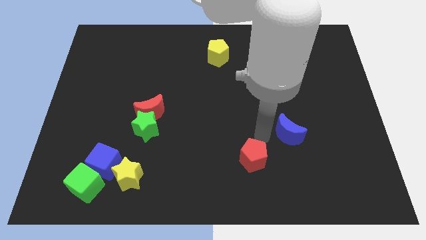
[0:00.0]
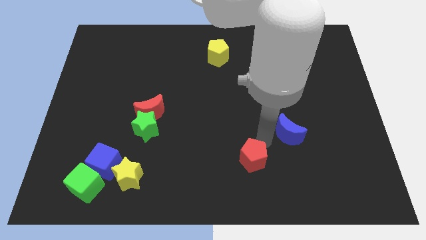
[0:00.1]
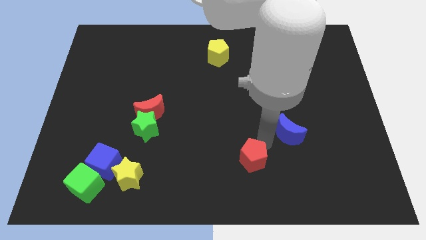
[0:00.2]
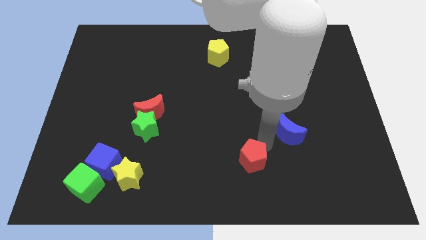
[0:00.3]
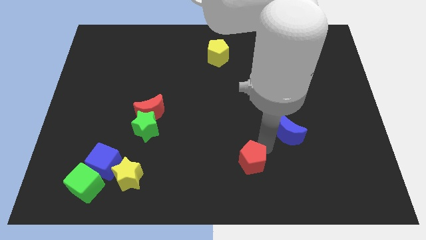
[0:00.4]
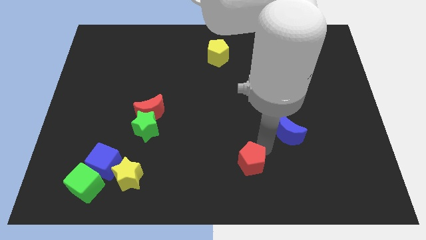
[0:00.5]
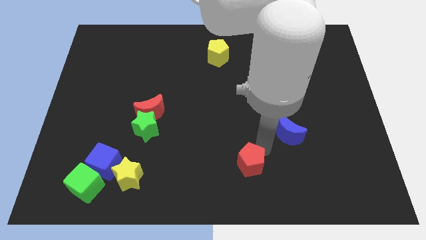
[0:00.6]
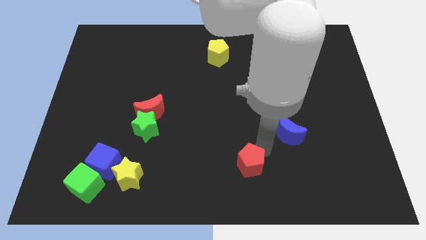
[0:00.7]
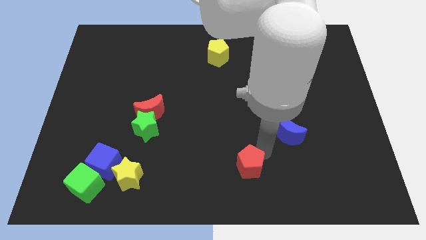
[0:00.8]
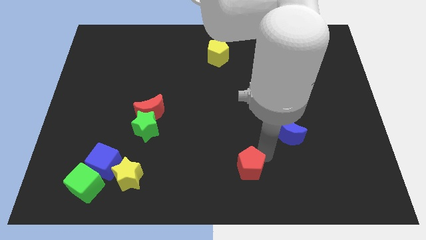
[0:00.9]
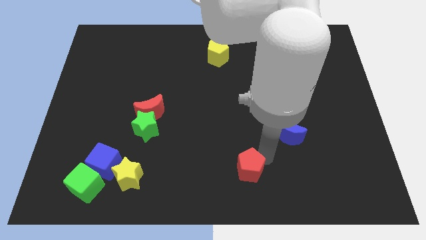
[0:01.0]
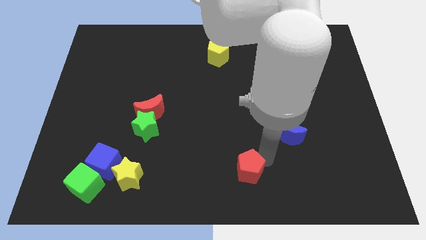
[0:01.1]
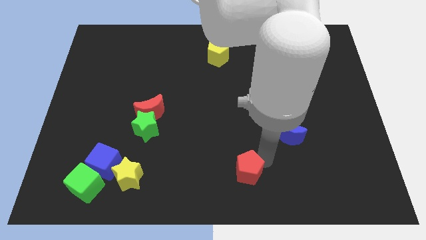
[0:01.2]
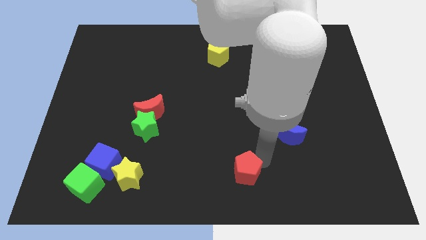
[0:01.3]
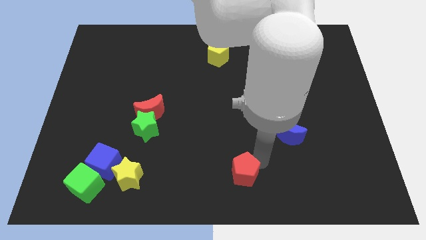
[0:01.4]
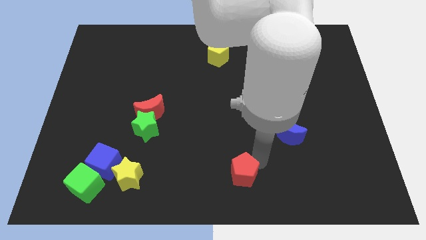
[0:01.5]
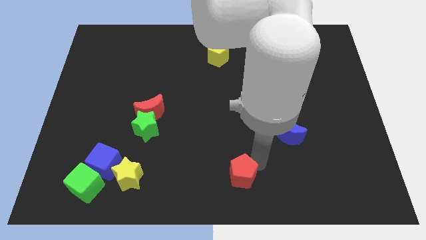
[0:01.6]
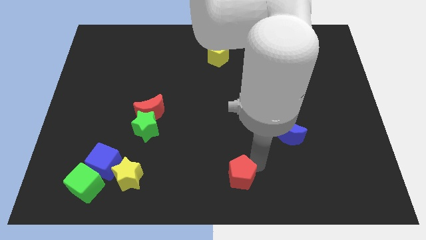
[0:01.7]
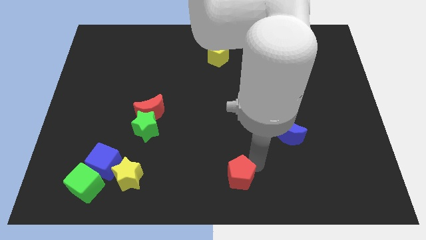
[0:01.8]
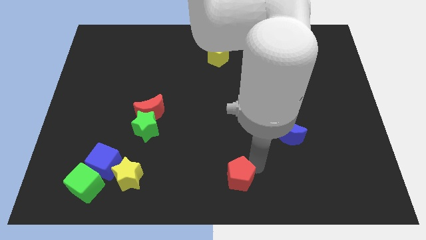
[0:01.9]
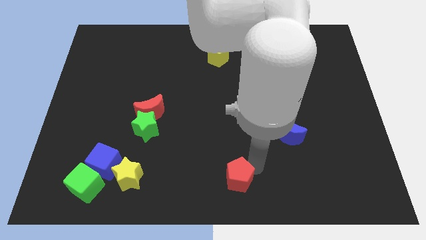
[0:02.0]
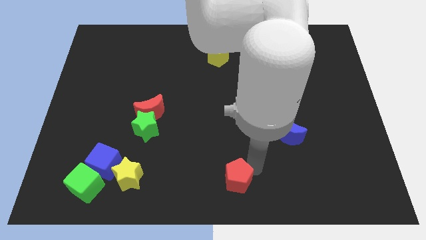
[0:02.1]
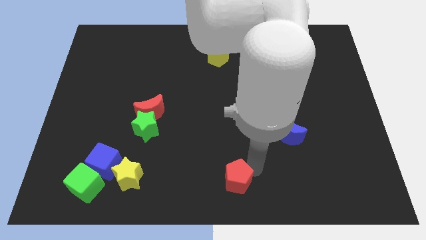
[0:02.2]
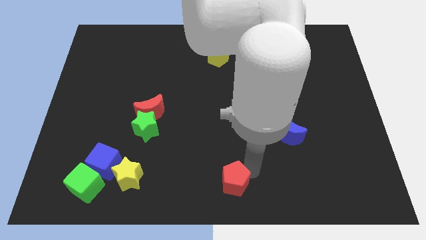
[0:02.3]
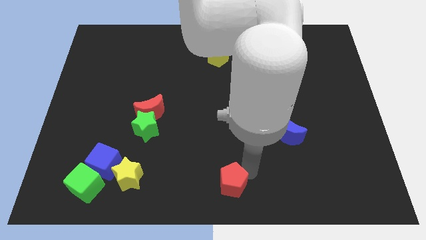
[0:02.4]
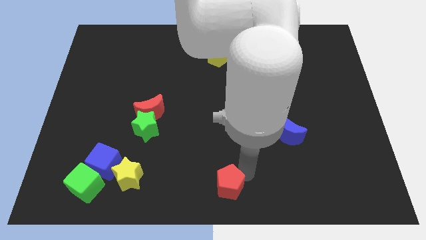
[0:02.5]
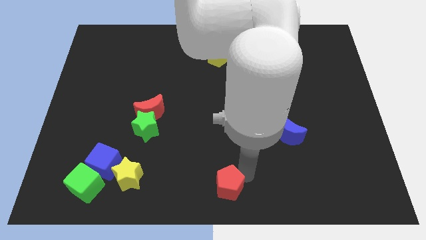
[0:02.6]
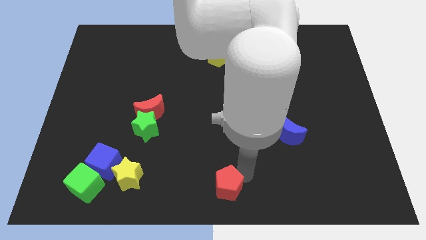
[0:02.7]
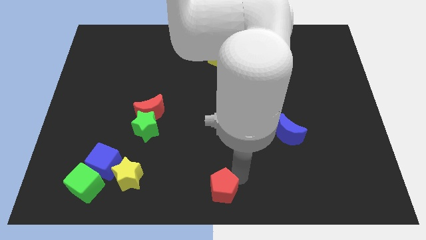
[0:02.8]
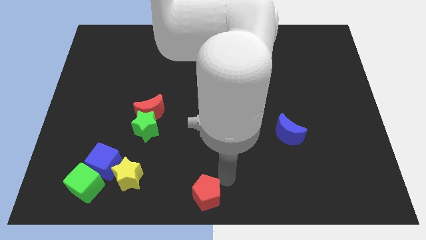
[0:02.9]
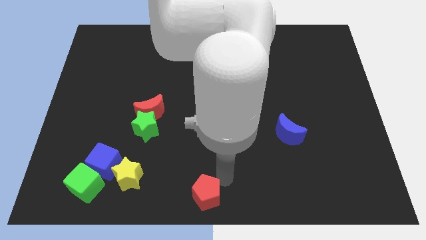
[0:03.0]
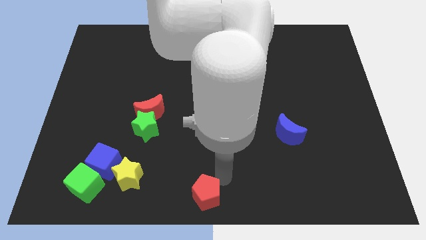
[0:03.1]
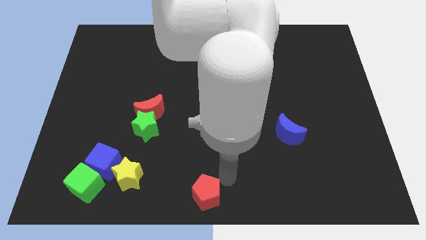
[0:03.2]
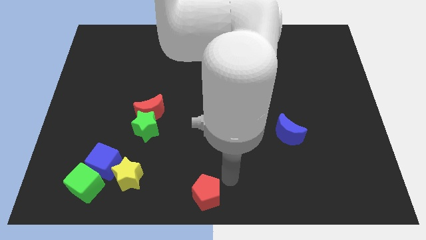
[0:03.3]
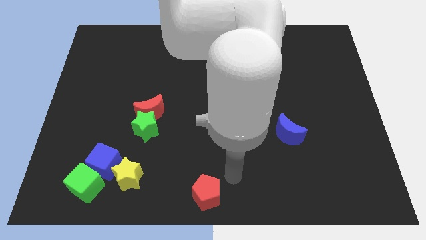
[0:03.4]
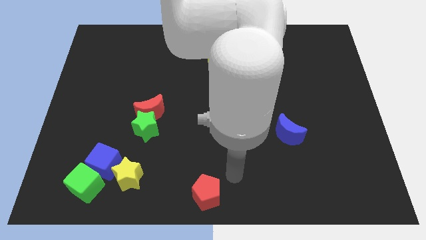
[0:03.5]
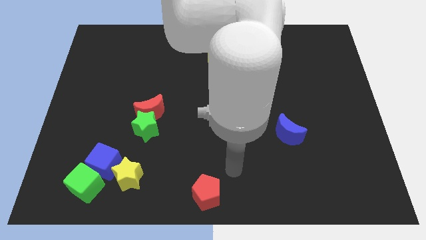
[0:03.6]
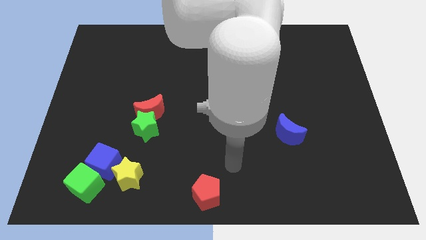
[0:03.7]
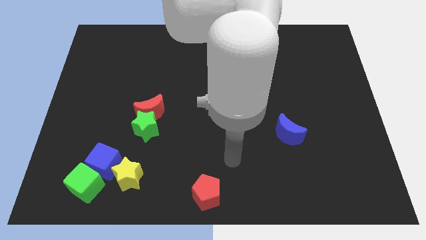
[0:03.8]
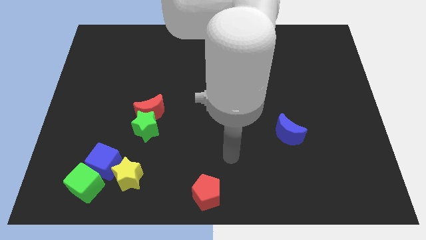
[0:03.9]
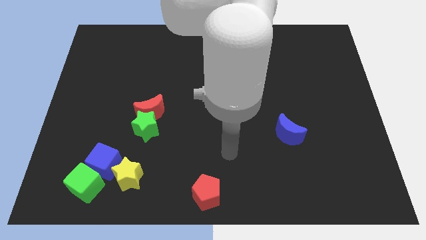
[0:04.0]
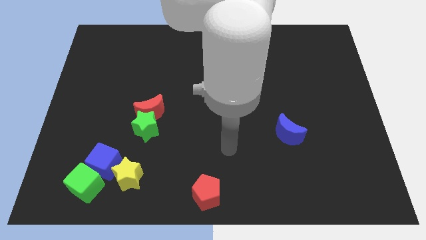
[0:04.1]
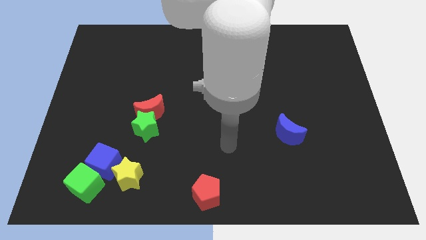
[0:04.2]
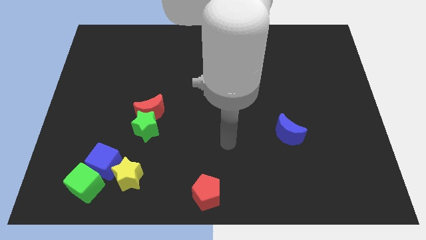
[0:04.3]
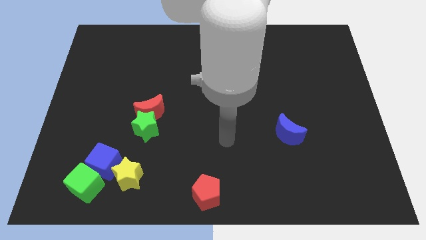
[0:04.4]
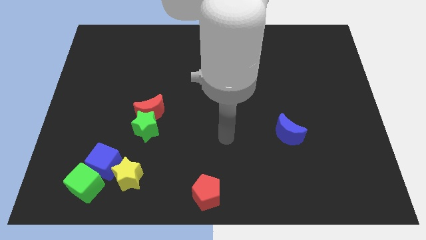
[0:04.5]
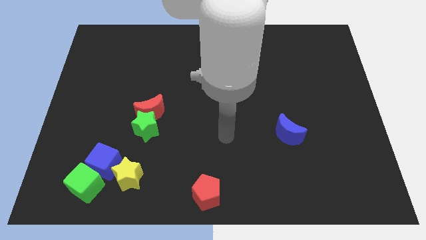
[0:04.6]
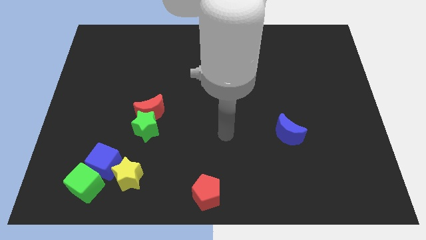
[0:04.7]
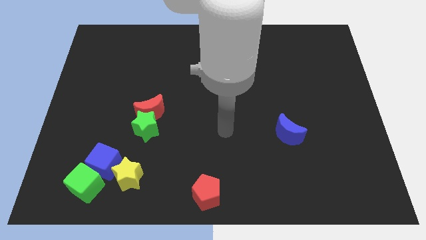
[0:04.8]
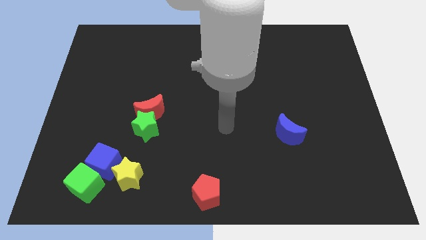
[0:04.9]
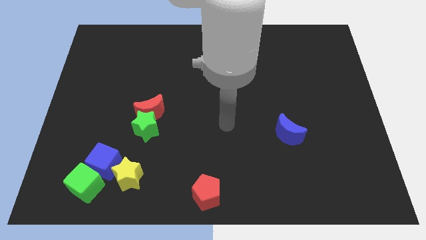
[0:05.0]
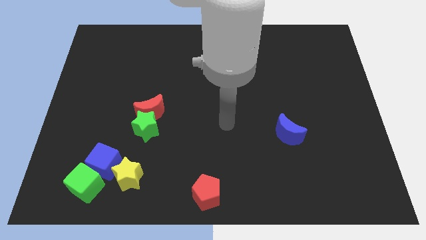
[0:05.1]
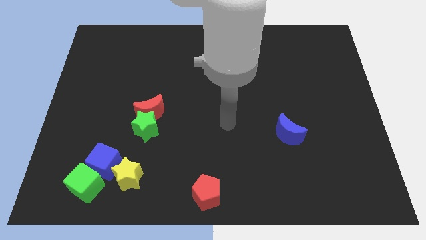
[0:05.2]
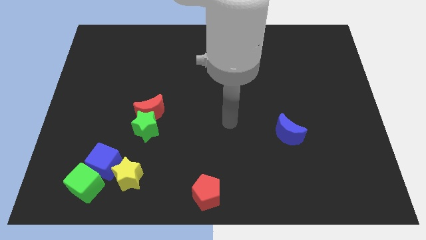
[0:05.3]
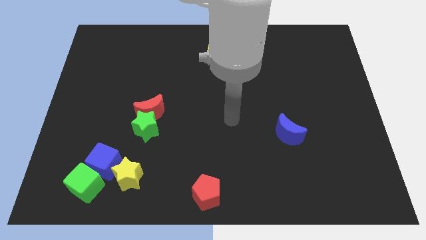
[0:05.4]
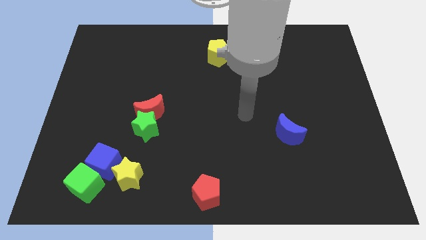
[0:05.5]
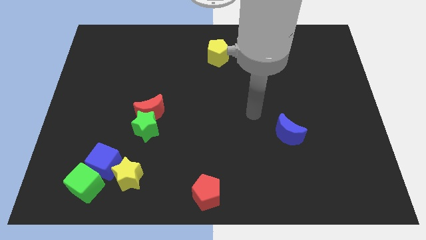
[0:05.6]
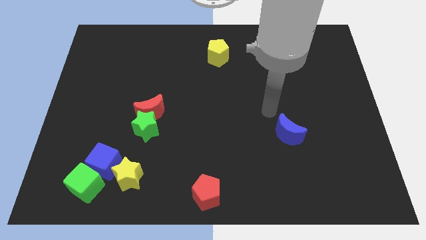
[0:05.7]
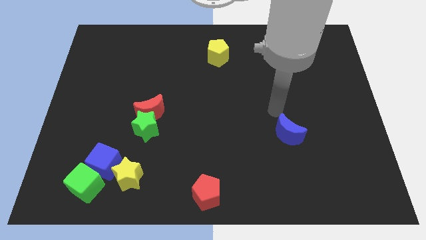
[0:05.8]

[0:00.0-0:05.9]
place the red pentagon below the yellow pentagon

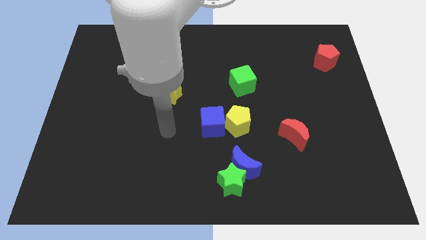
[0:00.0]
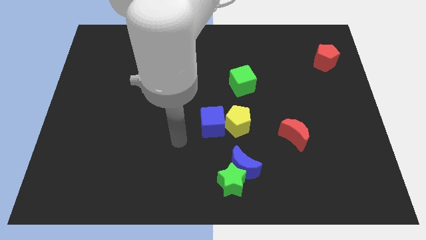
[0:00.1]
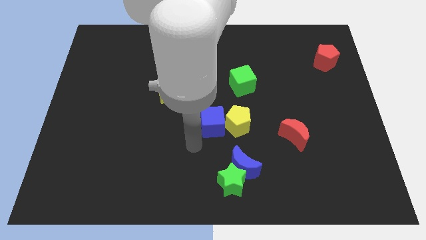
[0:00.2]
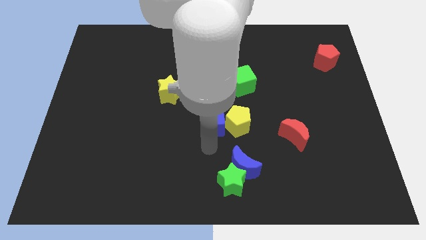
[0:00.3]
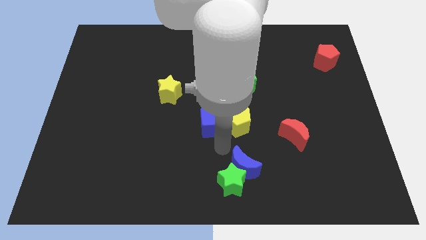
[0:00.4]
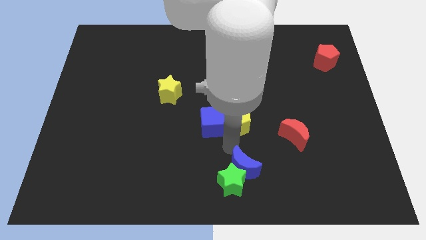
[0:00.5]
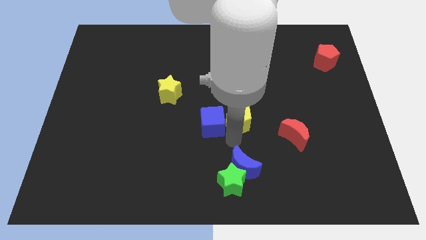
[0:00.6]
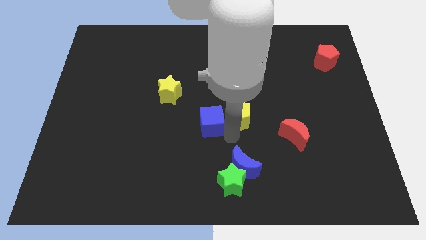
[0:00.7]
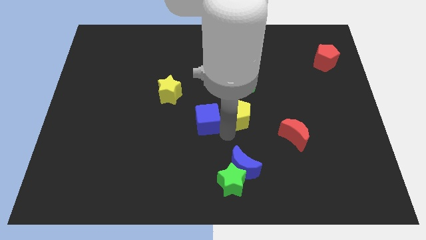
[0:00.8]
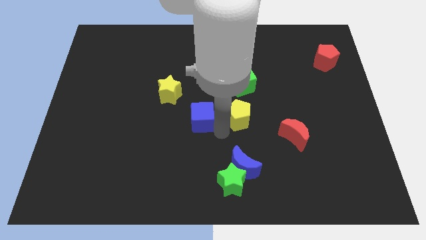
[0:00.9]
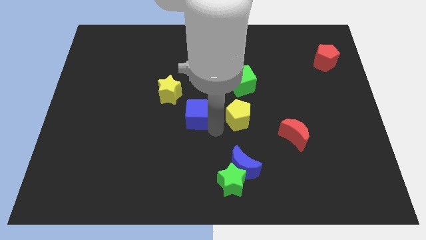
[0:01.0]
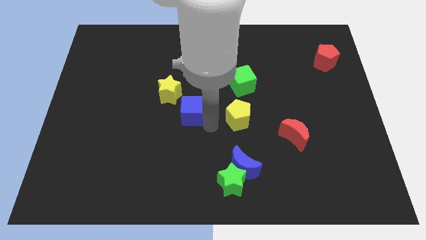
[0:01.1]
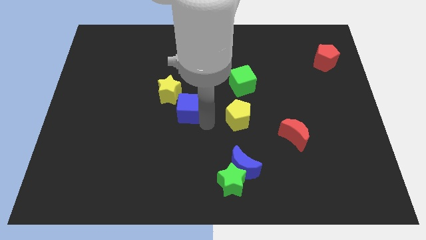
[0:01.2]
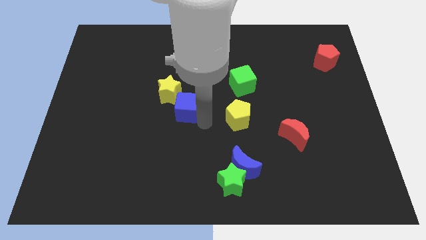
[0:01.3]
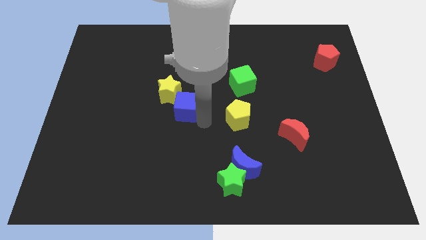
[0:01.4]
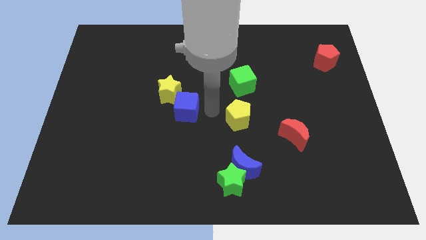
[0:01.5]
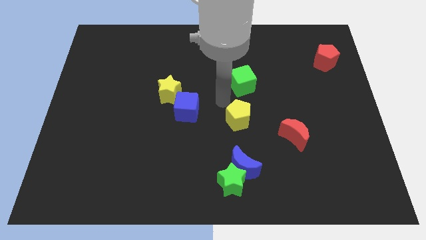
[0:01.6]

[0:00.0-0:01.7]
move the blue cube slightly to the left

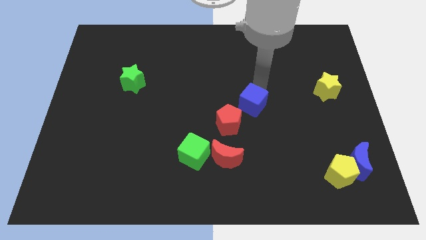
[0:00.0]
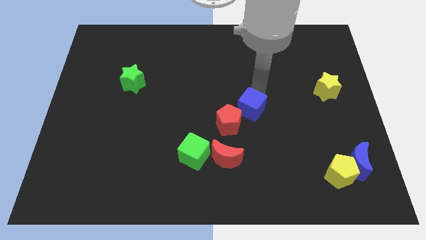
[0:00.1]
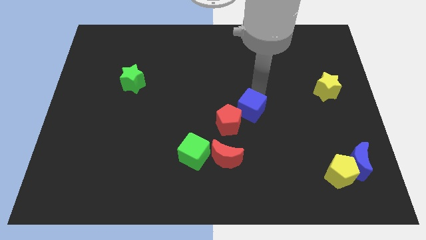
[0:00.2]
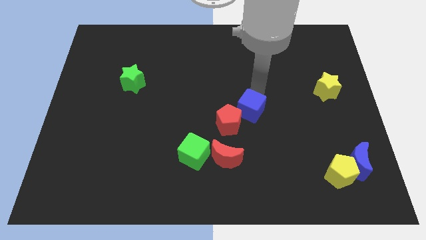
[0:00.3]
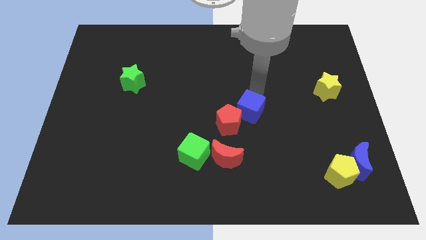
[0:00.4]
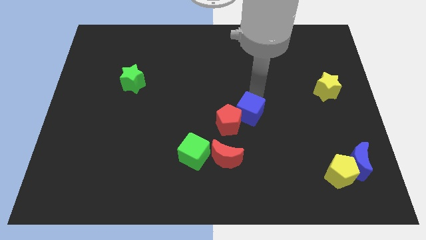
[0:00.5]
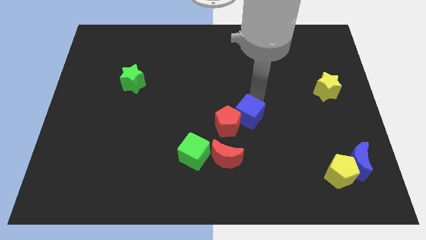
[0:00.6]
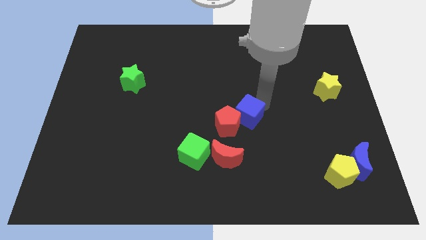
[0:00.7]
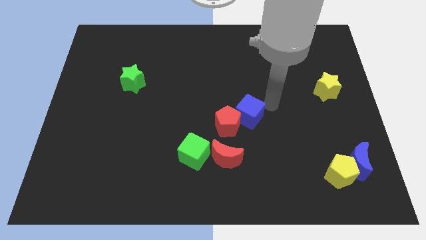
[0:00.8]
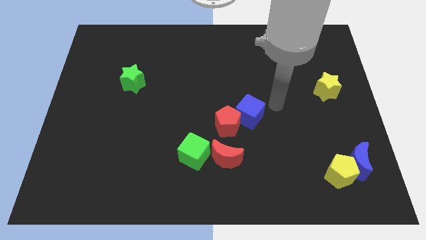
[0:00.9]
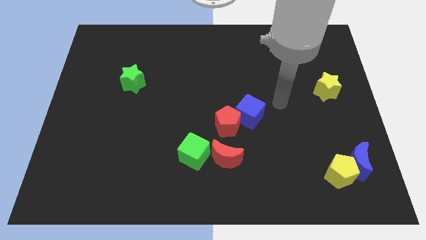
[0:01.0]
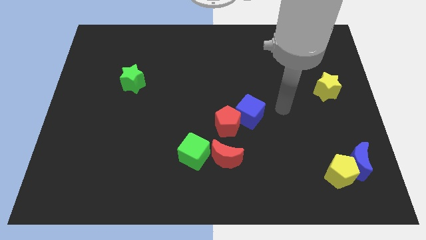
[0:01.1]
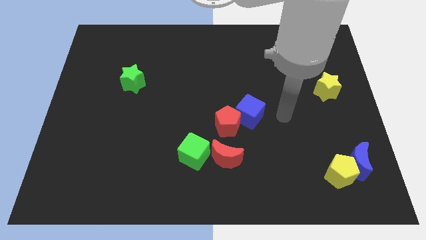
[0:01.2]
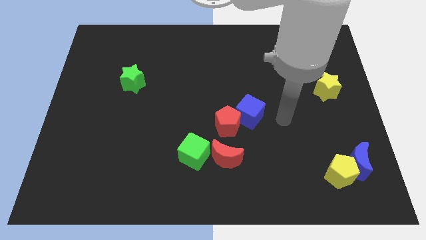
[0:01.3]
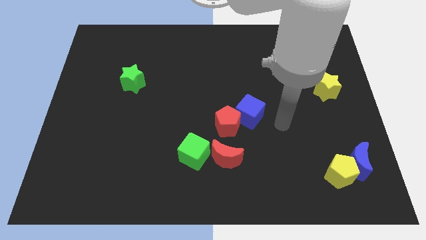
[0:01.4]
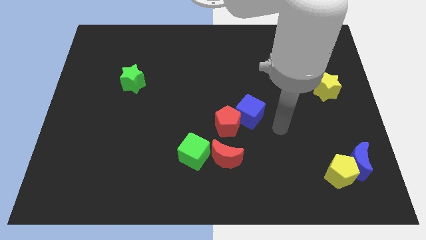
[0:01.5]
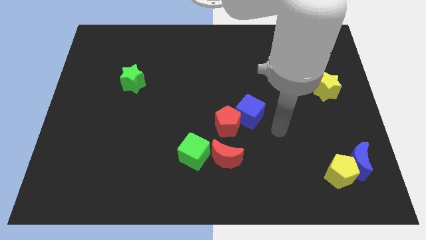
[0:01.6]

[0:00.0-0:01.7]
move the blue cube into the red pentagon
